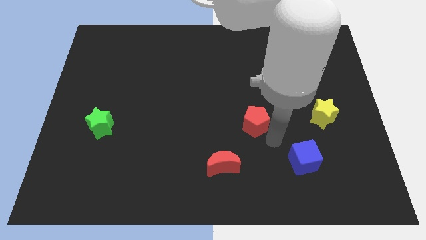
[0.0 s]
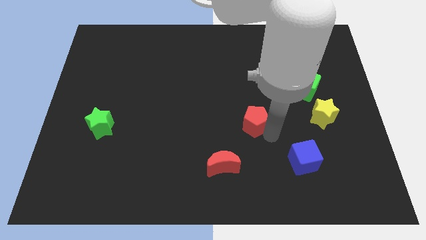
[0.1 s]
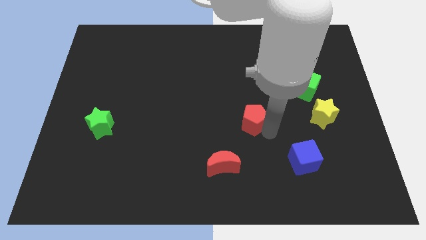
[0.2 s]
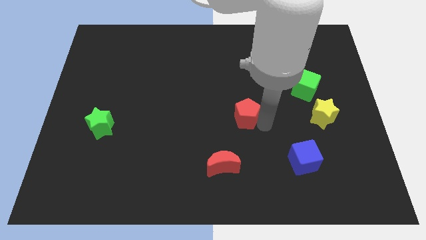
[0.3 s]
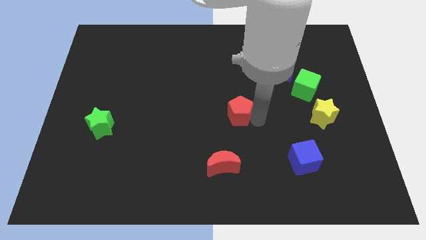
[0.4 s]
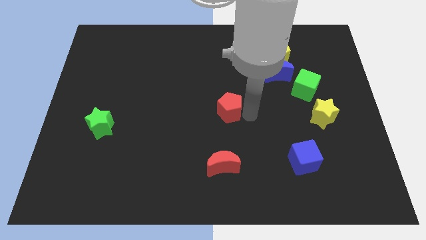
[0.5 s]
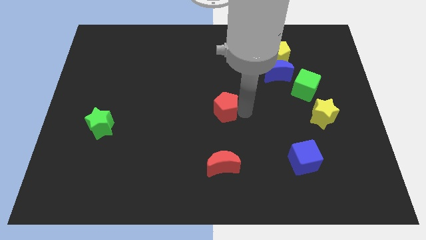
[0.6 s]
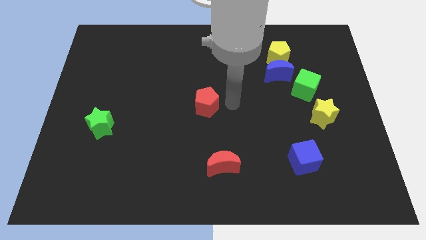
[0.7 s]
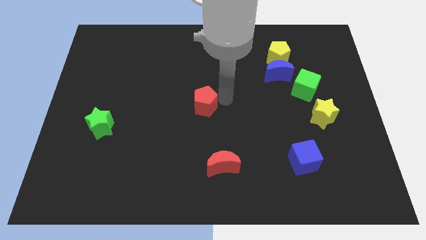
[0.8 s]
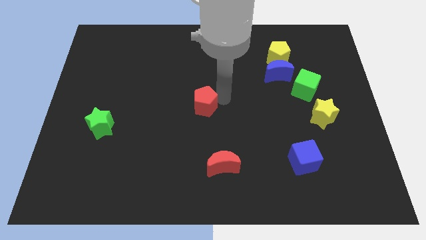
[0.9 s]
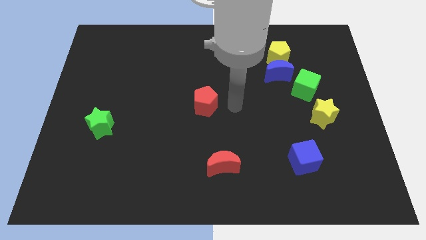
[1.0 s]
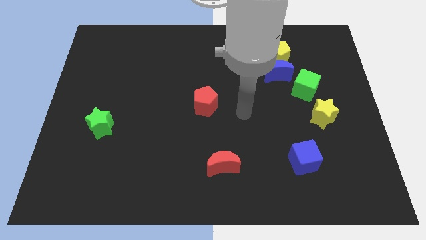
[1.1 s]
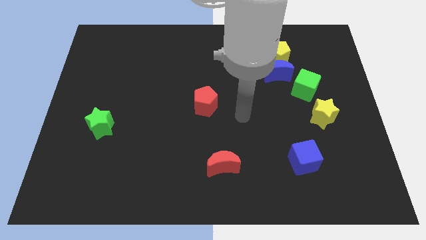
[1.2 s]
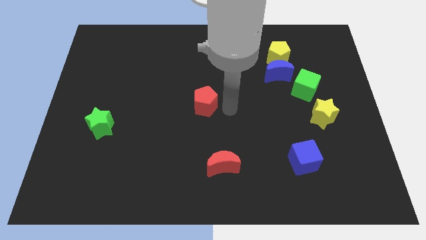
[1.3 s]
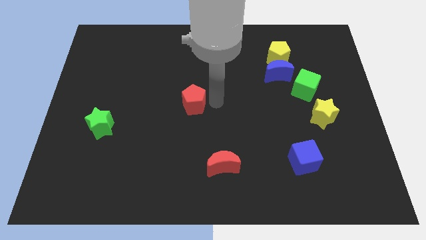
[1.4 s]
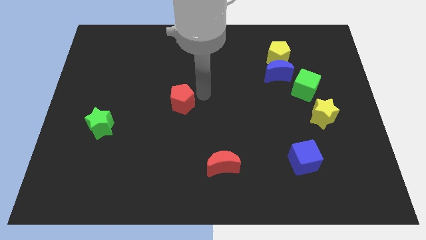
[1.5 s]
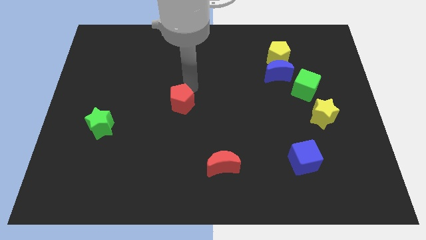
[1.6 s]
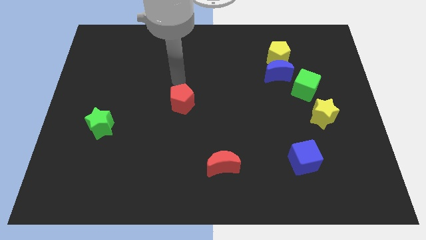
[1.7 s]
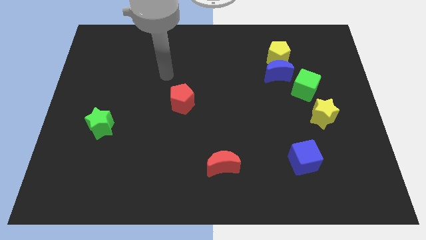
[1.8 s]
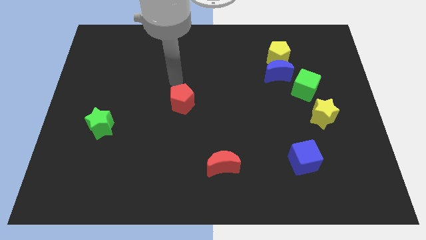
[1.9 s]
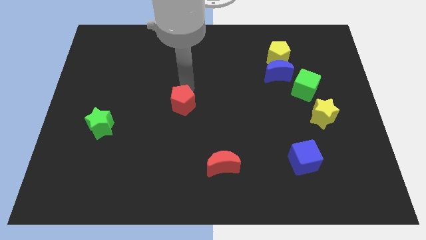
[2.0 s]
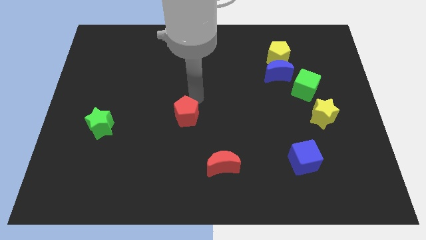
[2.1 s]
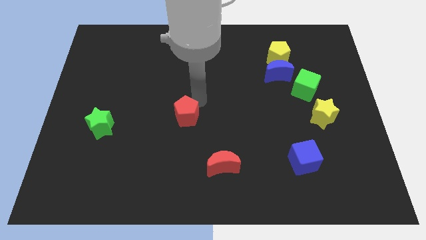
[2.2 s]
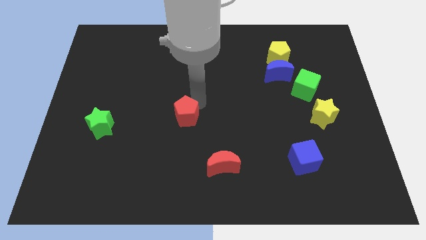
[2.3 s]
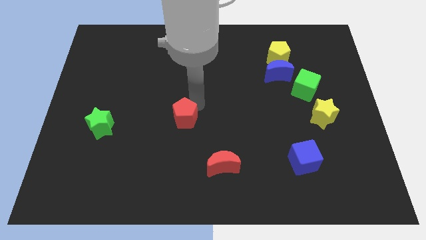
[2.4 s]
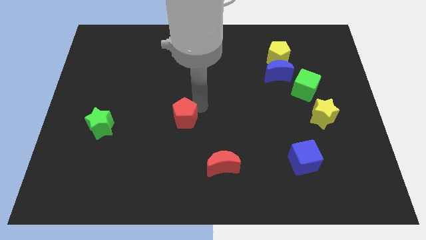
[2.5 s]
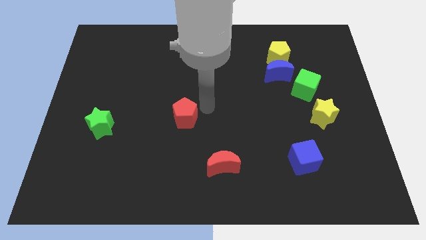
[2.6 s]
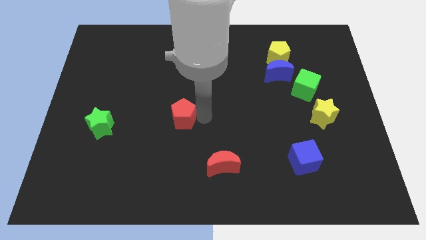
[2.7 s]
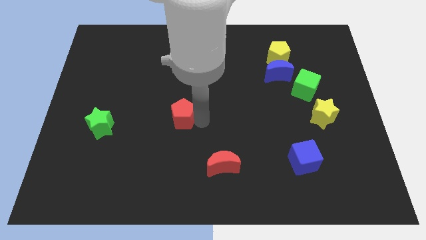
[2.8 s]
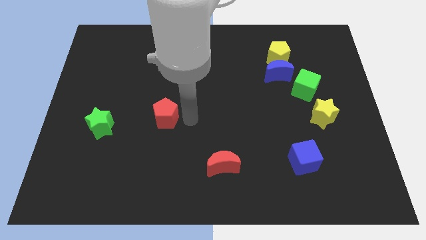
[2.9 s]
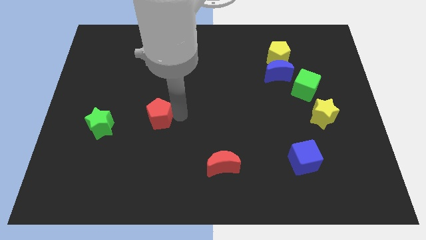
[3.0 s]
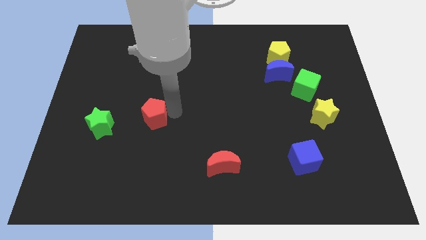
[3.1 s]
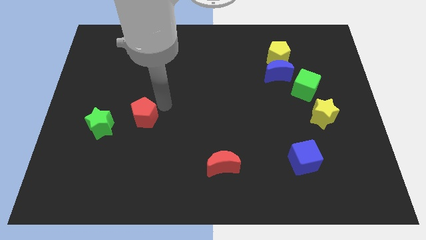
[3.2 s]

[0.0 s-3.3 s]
slide the red pentagon diagonally top right to the red crescent

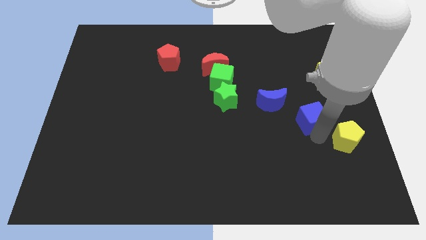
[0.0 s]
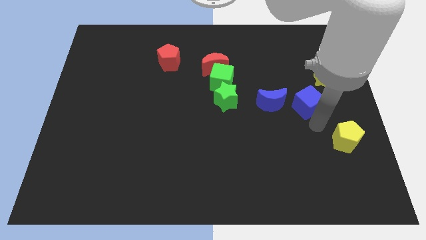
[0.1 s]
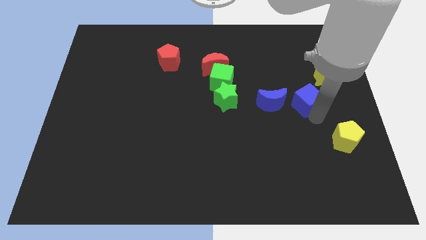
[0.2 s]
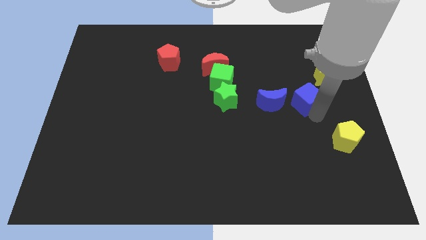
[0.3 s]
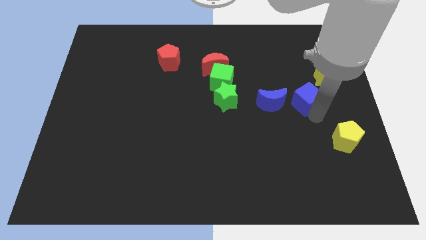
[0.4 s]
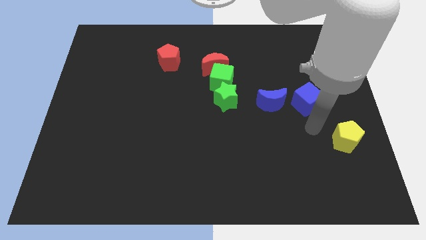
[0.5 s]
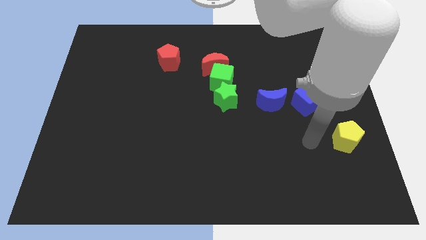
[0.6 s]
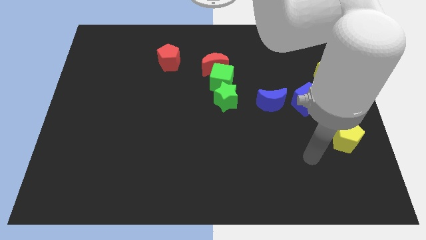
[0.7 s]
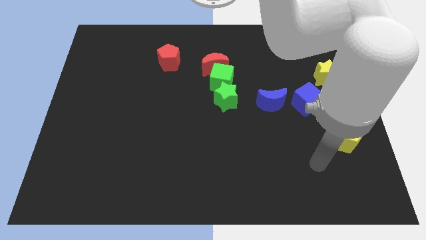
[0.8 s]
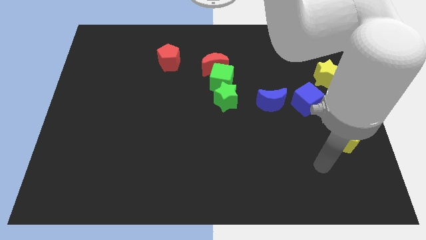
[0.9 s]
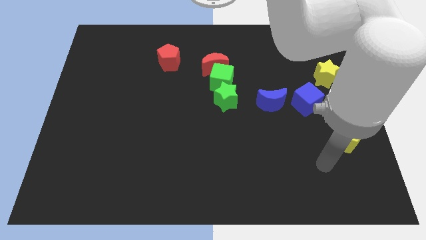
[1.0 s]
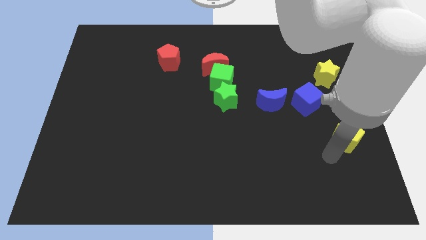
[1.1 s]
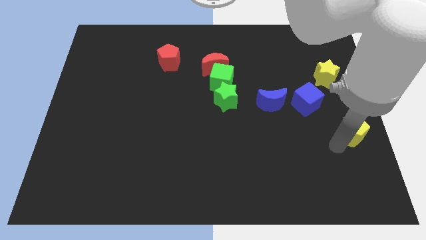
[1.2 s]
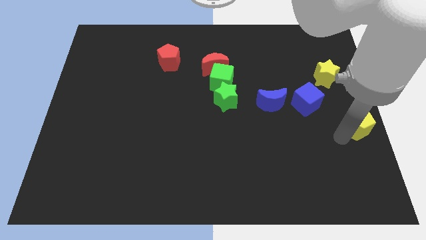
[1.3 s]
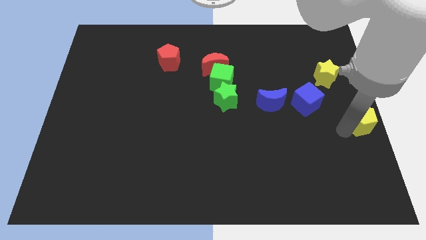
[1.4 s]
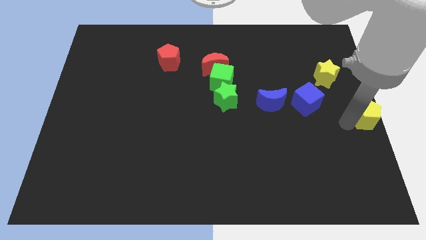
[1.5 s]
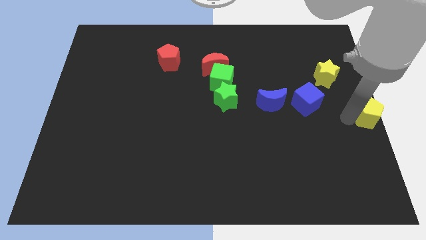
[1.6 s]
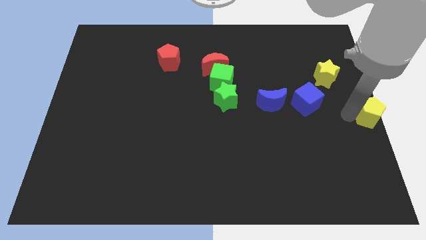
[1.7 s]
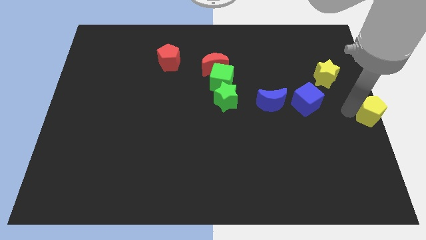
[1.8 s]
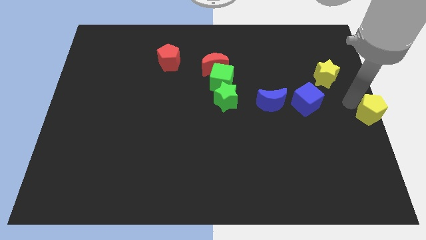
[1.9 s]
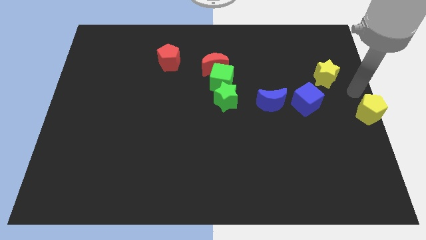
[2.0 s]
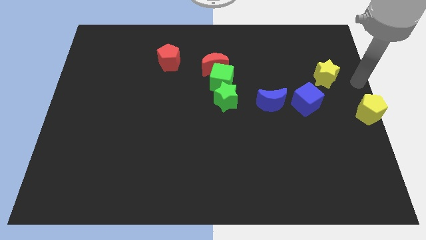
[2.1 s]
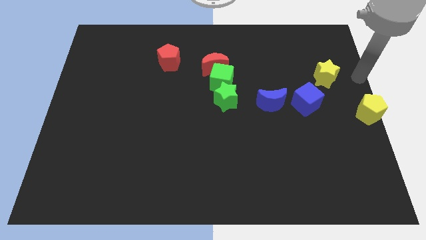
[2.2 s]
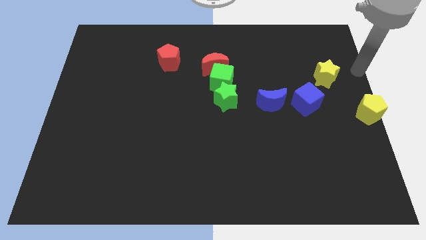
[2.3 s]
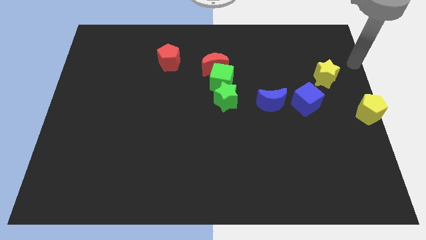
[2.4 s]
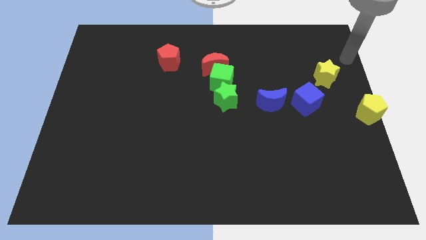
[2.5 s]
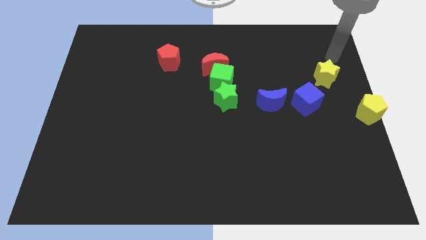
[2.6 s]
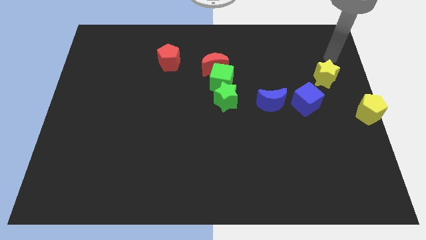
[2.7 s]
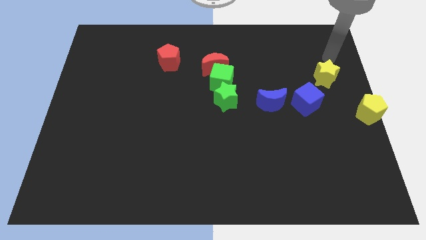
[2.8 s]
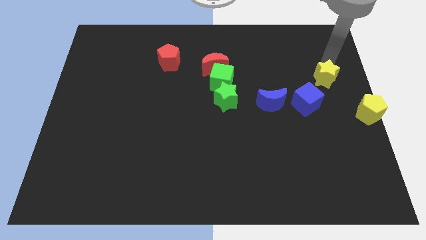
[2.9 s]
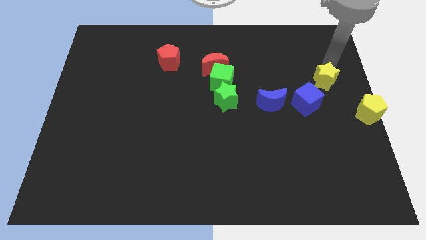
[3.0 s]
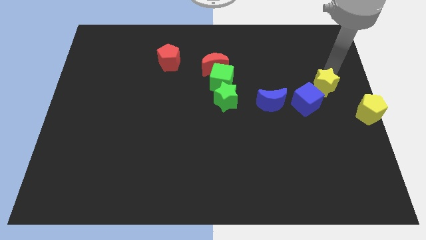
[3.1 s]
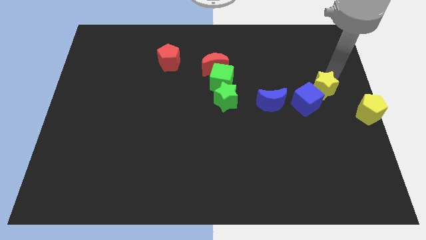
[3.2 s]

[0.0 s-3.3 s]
place the yellow pentagon to the middle right

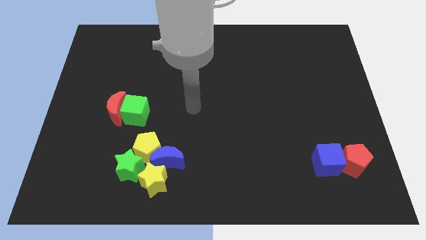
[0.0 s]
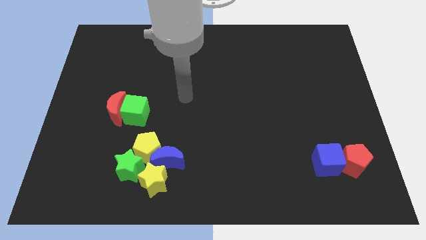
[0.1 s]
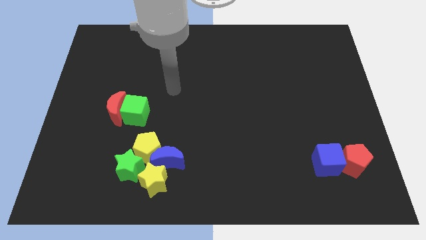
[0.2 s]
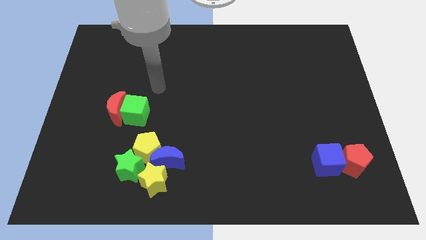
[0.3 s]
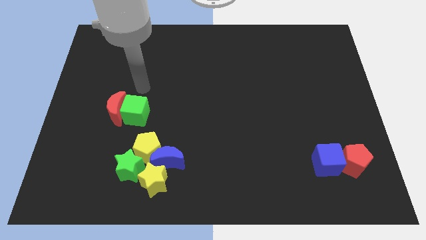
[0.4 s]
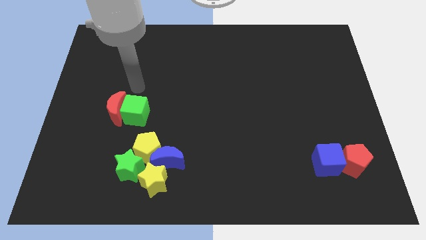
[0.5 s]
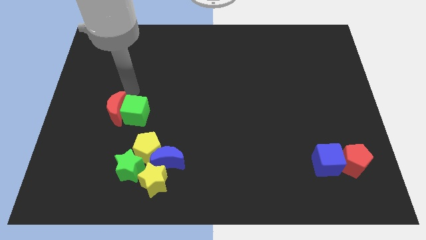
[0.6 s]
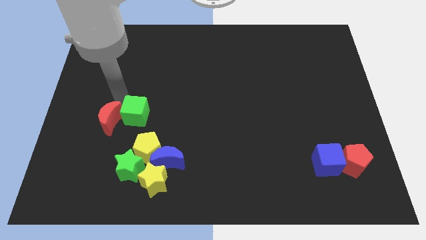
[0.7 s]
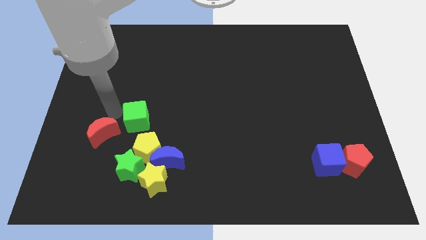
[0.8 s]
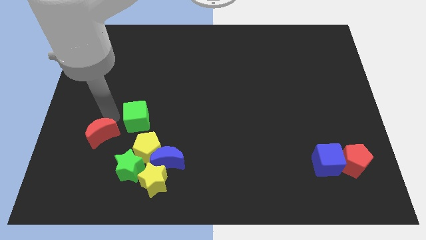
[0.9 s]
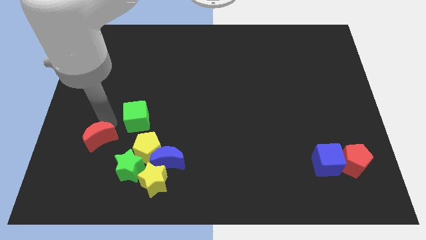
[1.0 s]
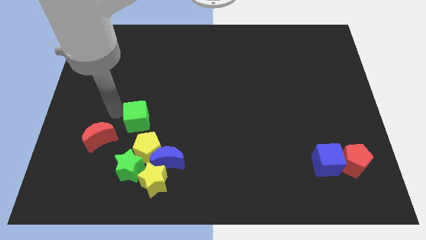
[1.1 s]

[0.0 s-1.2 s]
push the red crescent slightly to the bottom

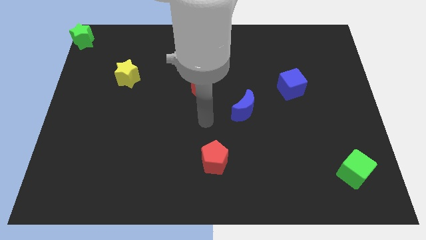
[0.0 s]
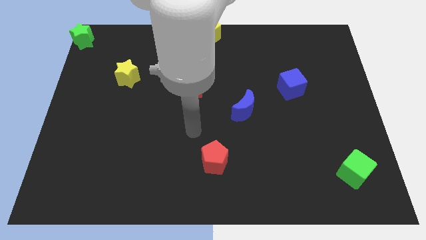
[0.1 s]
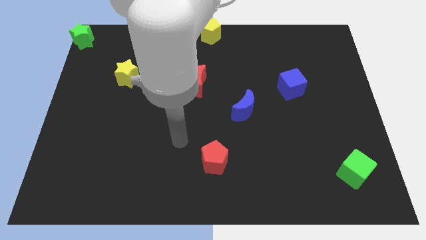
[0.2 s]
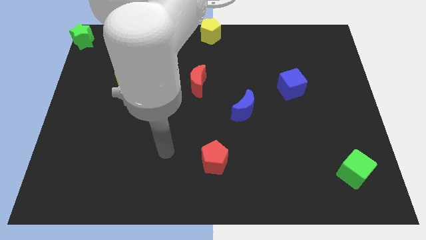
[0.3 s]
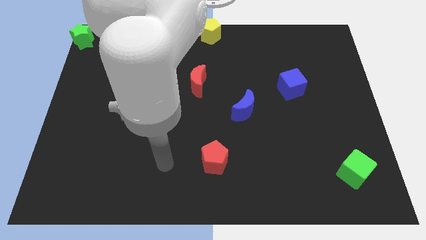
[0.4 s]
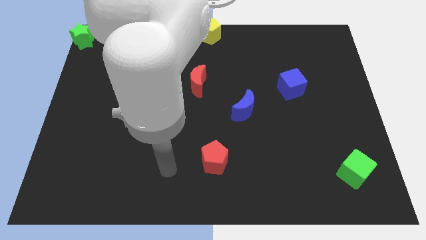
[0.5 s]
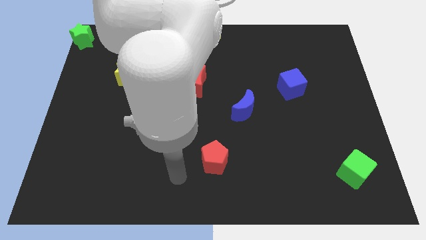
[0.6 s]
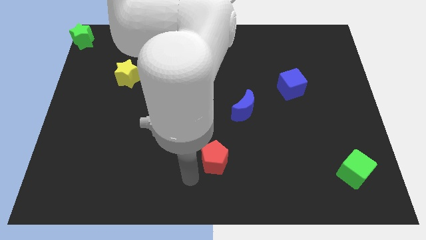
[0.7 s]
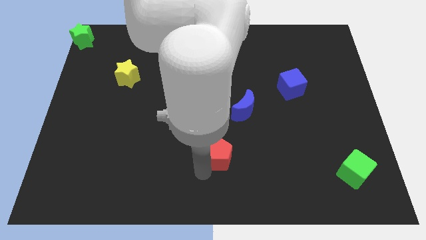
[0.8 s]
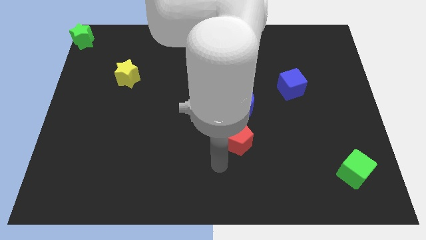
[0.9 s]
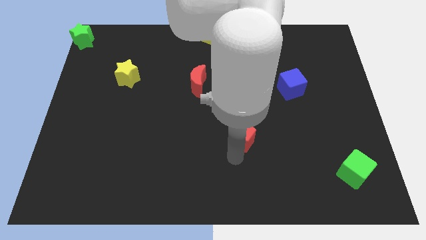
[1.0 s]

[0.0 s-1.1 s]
place red pentagon below the blue moon
